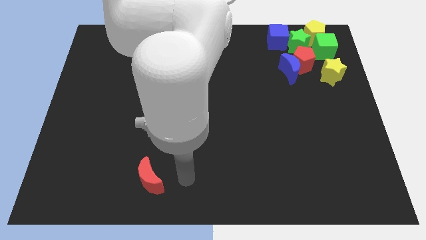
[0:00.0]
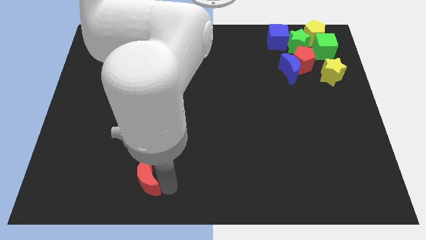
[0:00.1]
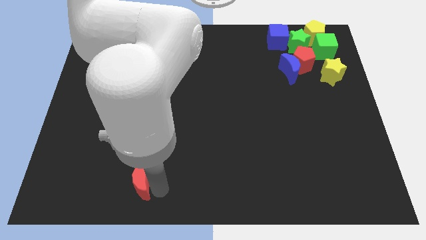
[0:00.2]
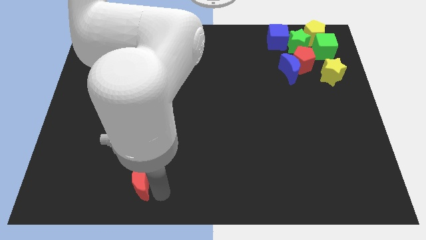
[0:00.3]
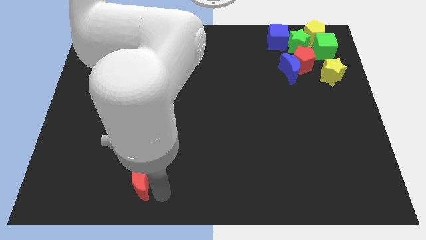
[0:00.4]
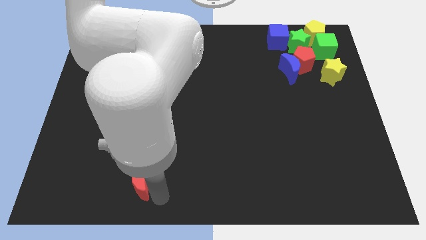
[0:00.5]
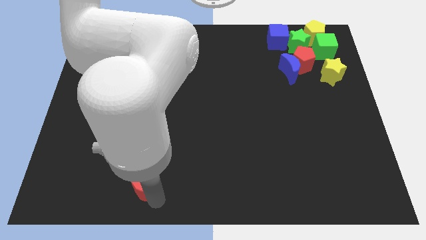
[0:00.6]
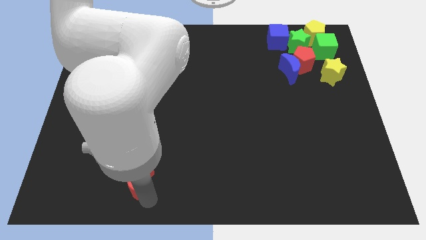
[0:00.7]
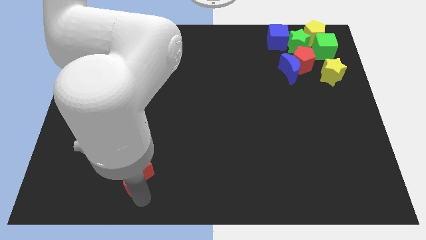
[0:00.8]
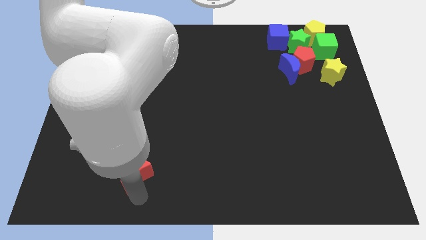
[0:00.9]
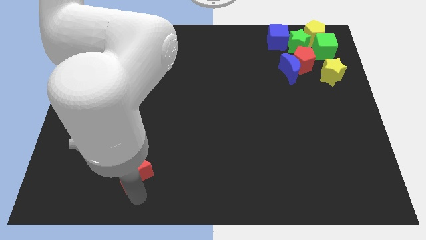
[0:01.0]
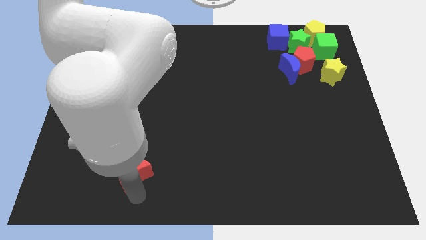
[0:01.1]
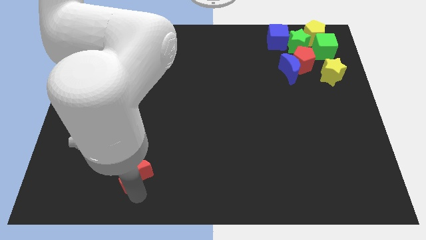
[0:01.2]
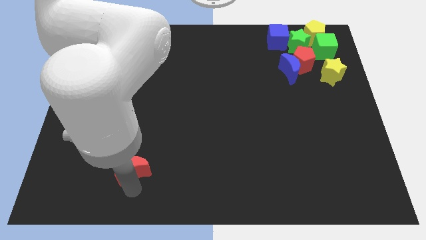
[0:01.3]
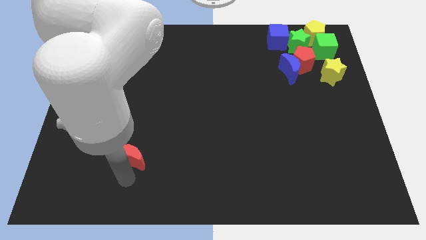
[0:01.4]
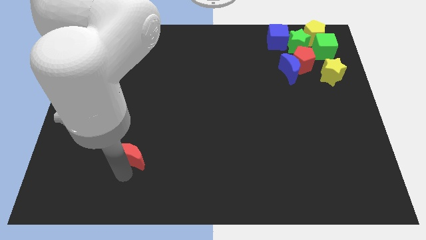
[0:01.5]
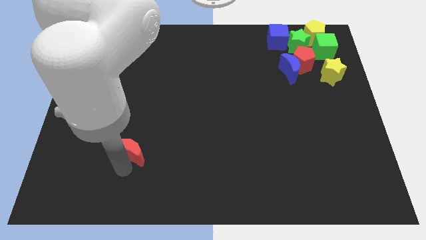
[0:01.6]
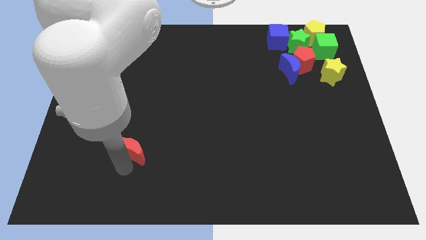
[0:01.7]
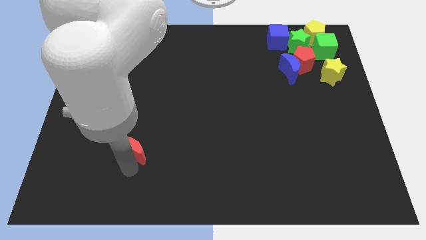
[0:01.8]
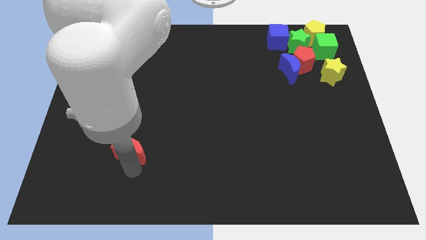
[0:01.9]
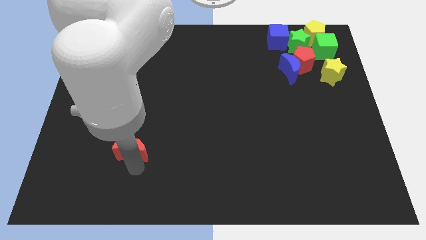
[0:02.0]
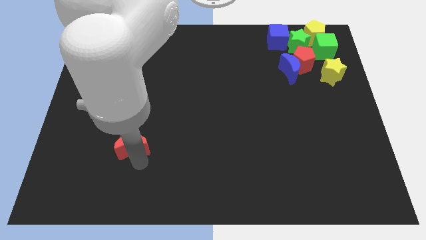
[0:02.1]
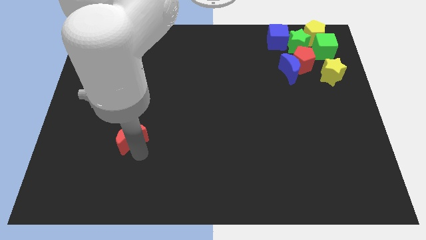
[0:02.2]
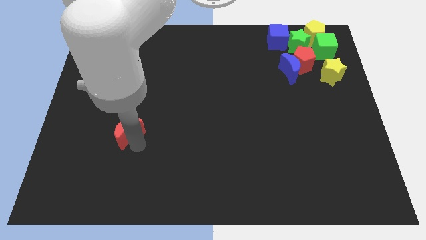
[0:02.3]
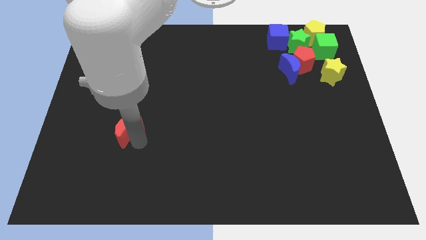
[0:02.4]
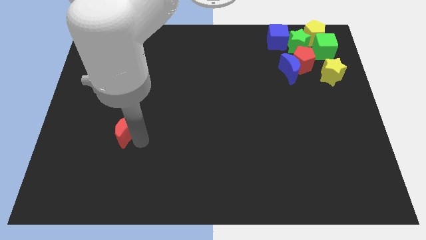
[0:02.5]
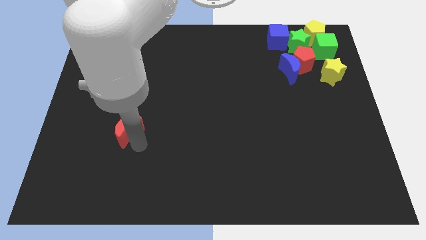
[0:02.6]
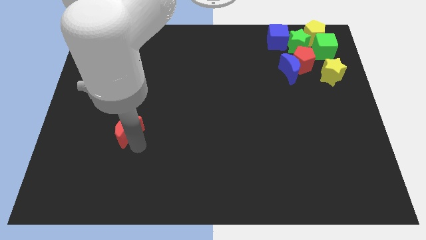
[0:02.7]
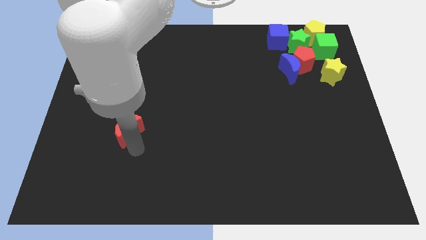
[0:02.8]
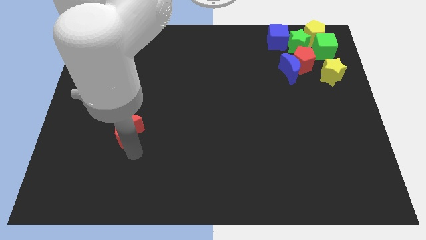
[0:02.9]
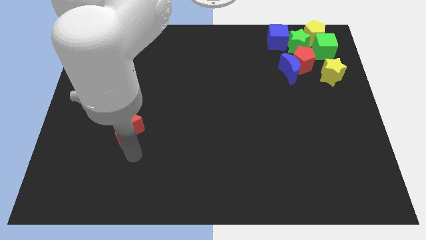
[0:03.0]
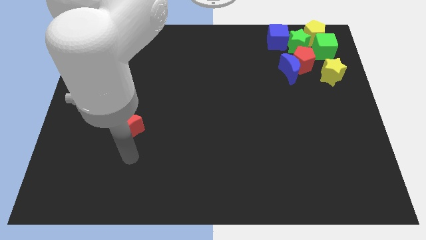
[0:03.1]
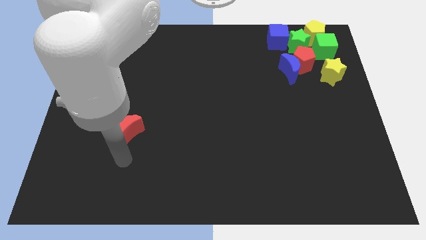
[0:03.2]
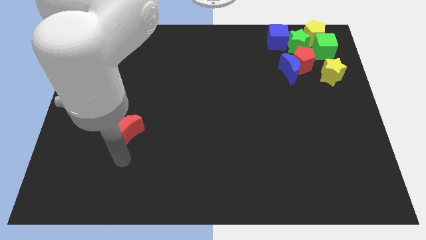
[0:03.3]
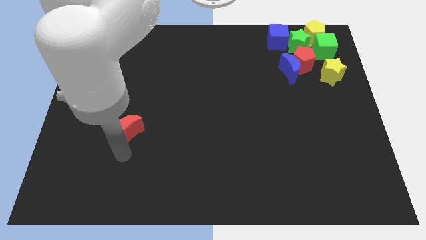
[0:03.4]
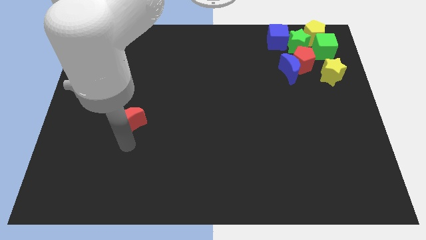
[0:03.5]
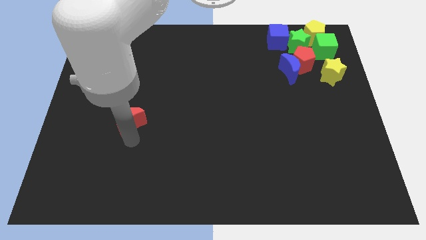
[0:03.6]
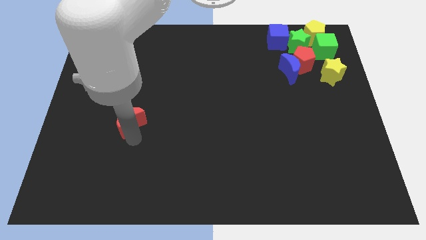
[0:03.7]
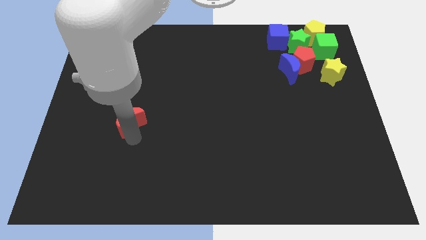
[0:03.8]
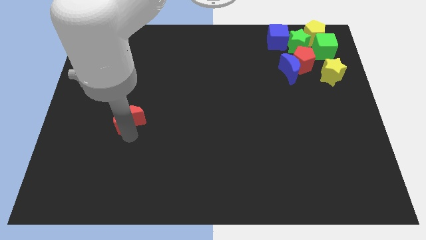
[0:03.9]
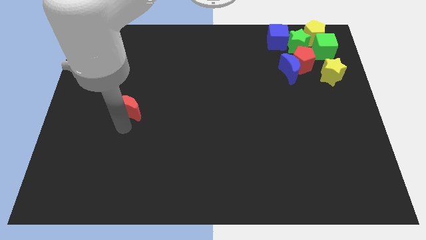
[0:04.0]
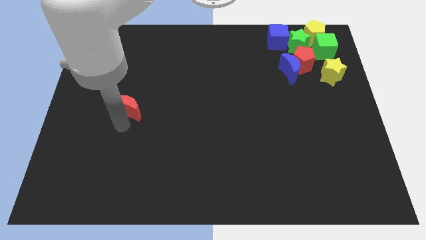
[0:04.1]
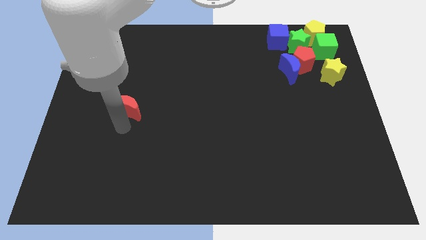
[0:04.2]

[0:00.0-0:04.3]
move the red moon to the top of the board slightly

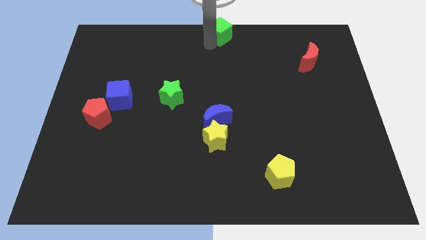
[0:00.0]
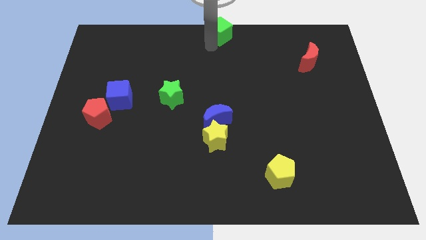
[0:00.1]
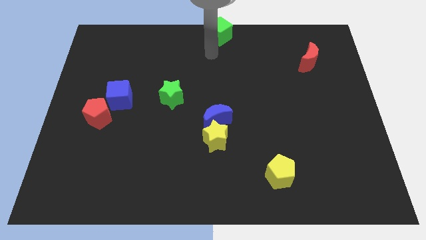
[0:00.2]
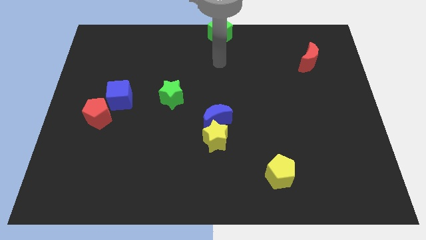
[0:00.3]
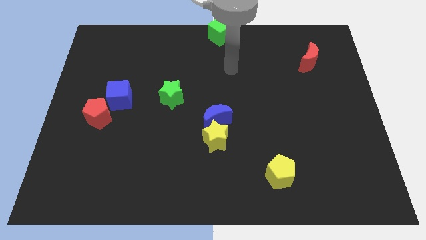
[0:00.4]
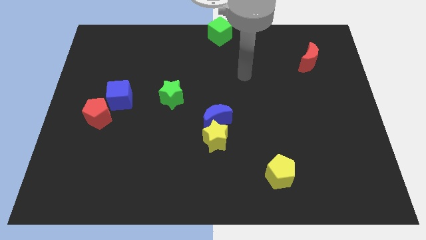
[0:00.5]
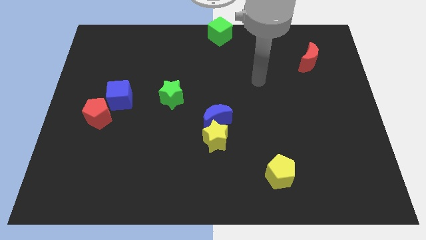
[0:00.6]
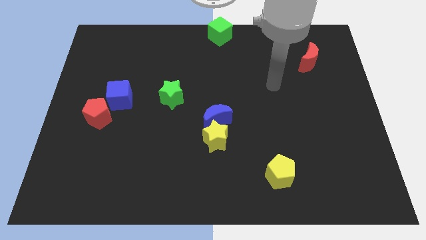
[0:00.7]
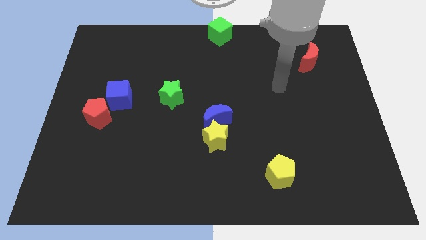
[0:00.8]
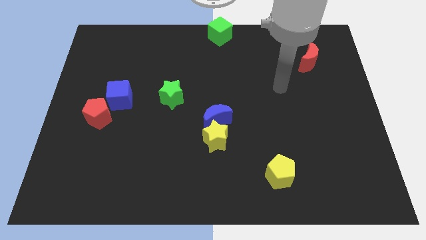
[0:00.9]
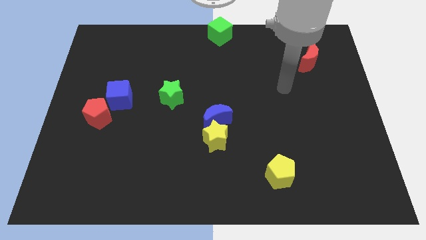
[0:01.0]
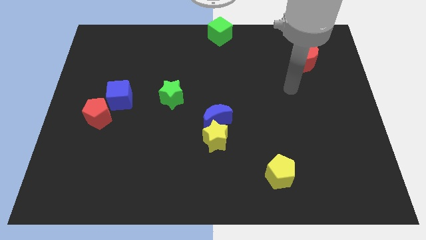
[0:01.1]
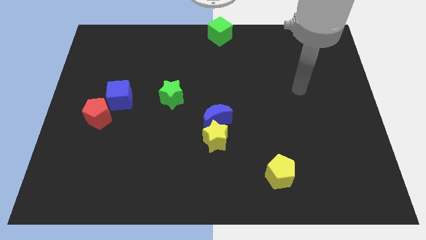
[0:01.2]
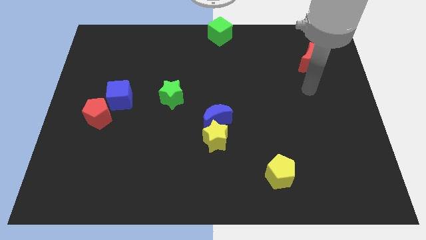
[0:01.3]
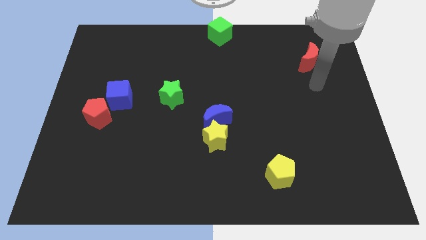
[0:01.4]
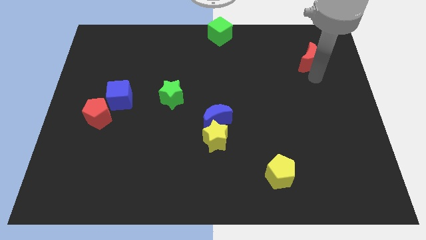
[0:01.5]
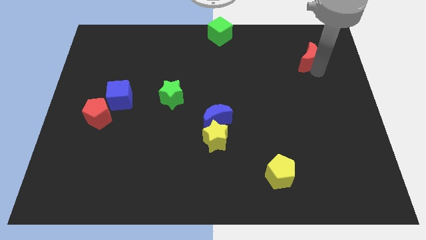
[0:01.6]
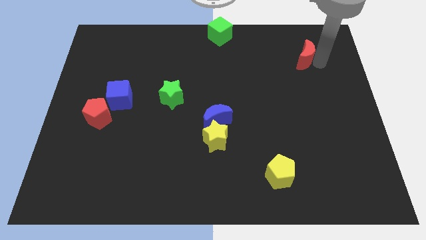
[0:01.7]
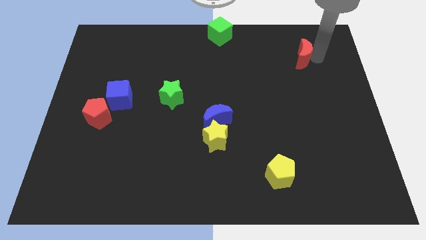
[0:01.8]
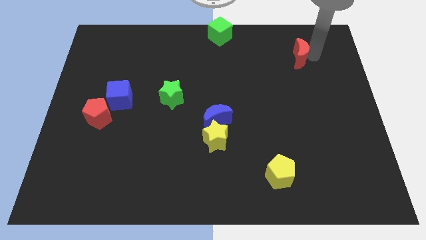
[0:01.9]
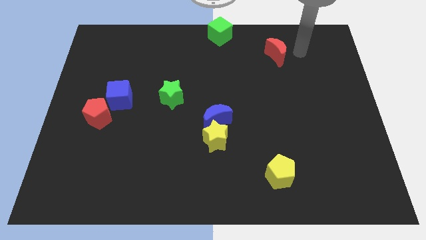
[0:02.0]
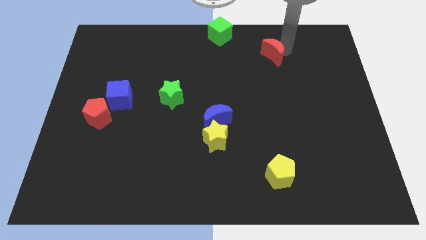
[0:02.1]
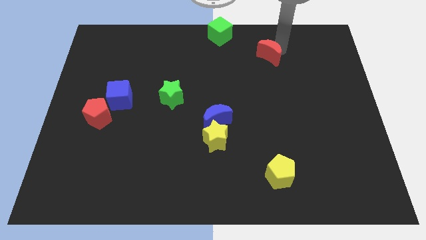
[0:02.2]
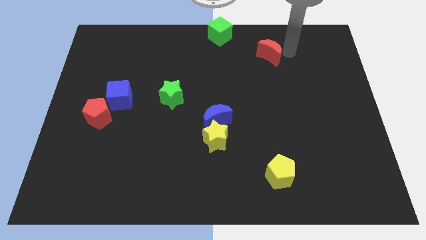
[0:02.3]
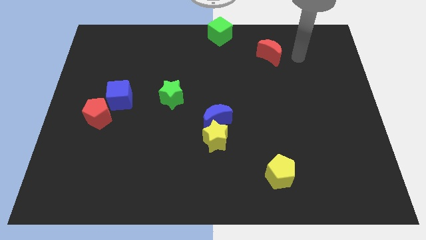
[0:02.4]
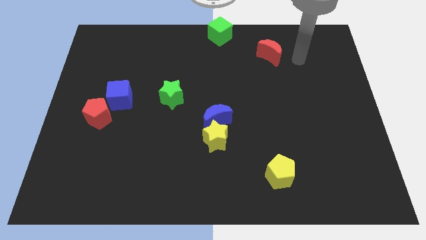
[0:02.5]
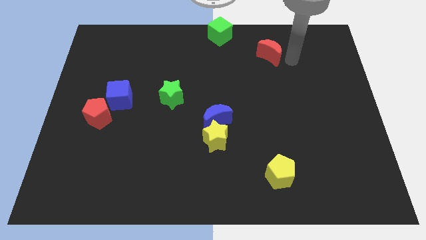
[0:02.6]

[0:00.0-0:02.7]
move the red moon diagonal to the green cube

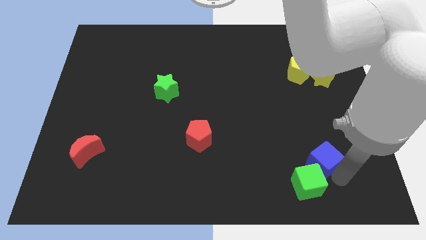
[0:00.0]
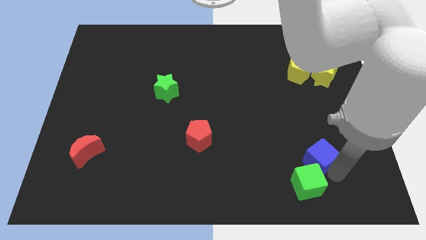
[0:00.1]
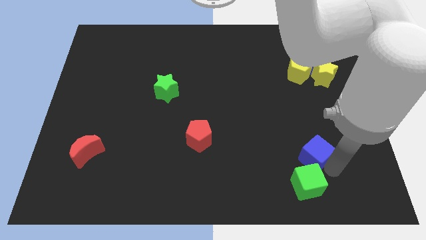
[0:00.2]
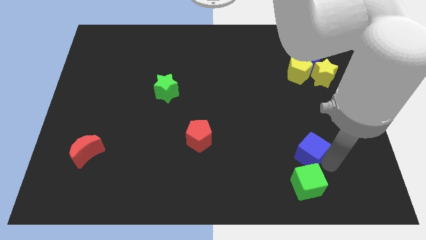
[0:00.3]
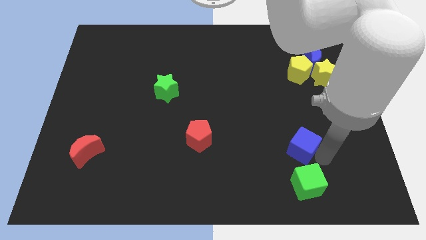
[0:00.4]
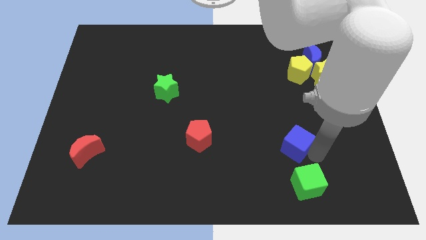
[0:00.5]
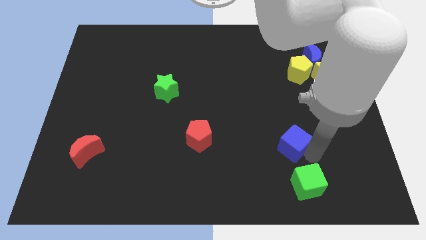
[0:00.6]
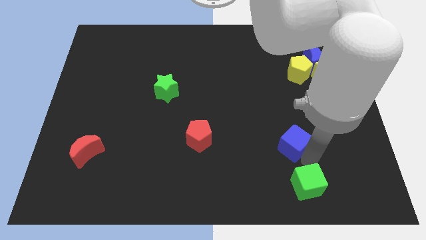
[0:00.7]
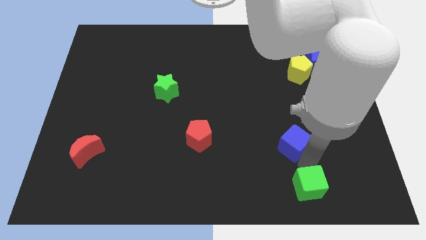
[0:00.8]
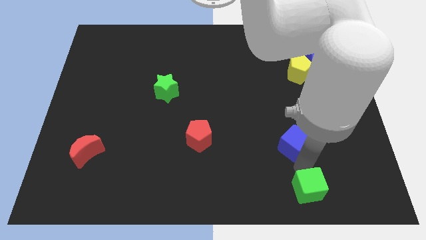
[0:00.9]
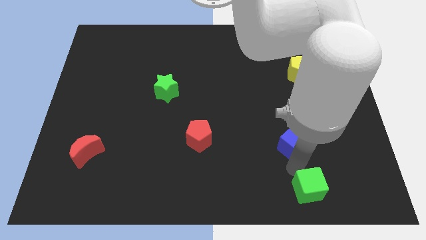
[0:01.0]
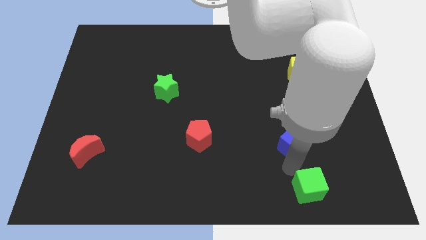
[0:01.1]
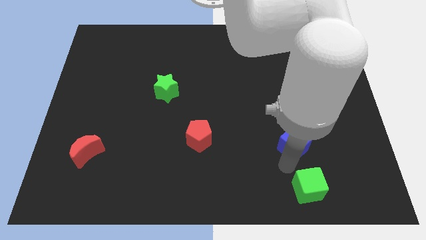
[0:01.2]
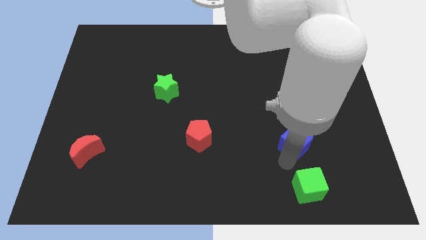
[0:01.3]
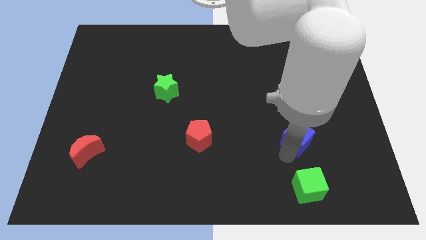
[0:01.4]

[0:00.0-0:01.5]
place the blue cube above the green cube

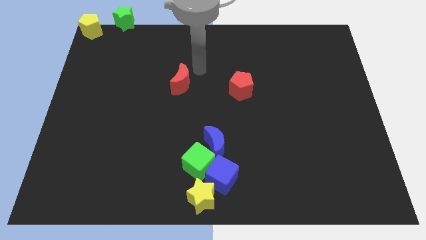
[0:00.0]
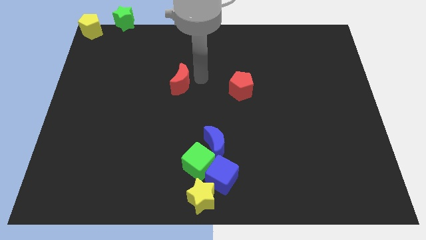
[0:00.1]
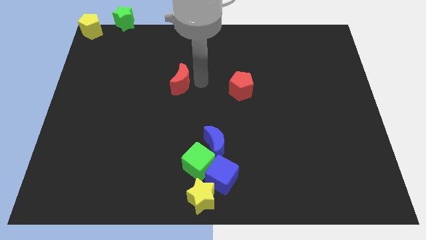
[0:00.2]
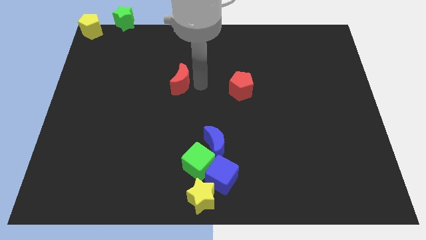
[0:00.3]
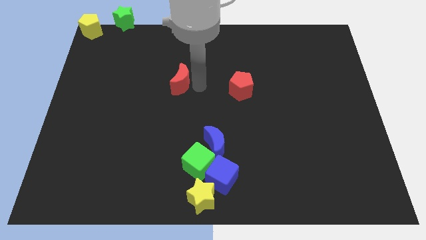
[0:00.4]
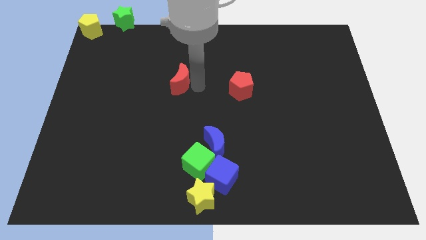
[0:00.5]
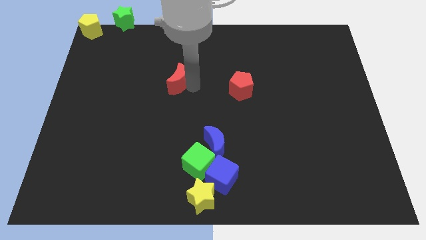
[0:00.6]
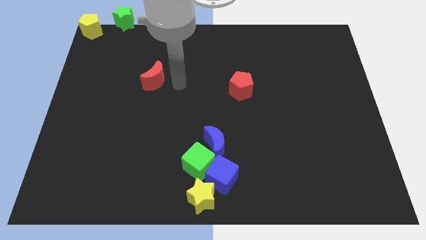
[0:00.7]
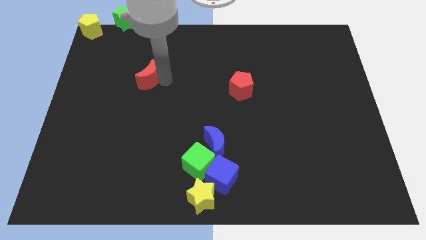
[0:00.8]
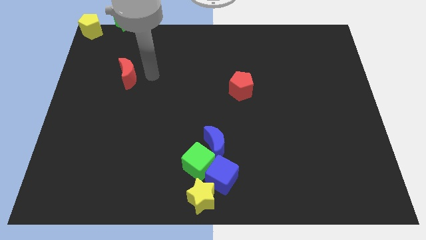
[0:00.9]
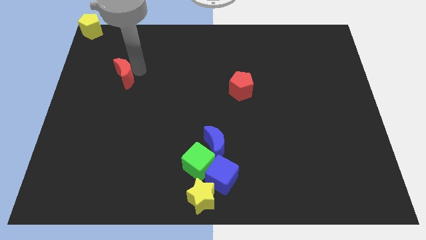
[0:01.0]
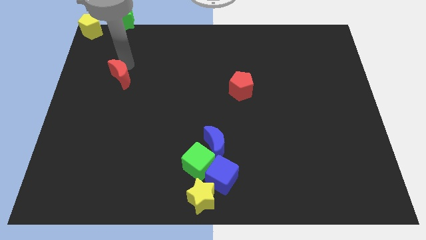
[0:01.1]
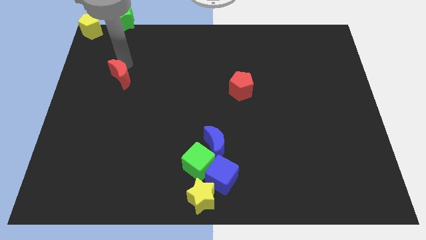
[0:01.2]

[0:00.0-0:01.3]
put the red crescent below the green star
